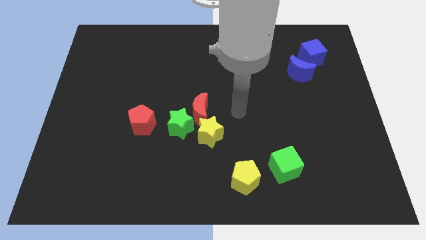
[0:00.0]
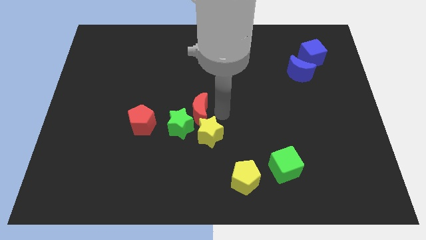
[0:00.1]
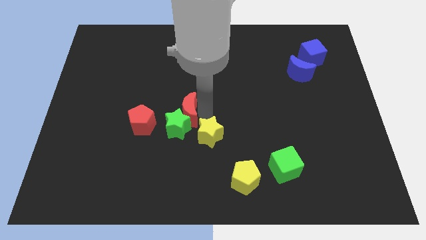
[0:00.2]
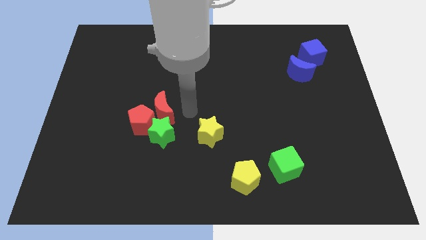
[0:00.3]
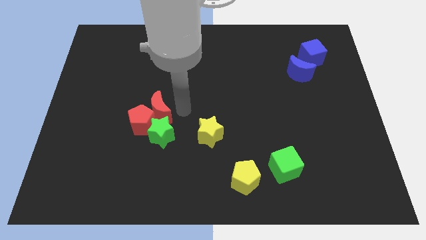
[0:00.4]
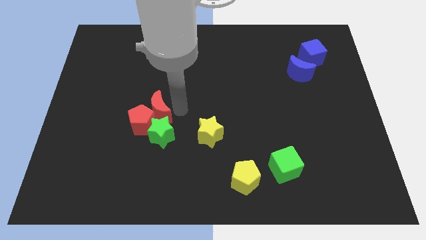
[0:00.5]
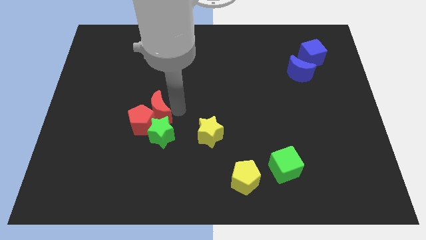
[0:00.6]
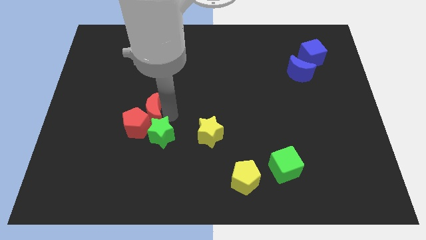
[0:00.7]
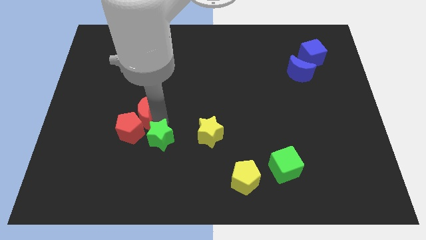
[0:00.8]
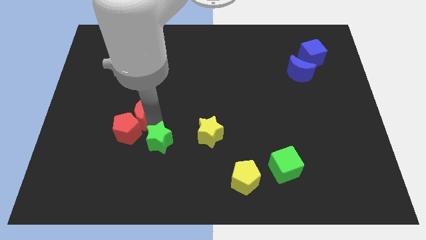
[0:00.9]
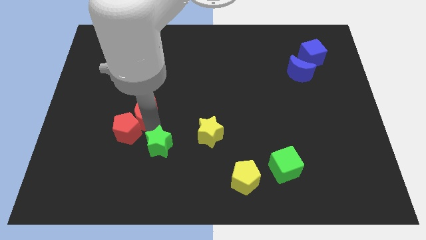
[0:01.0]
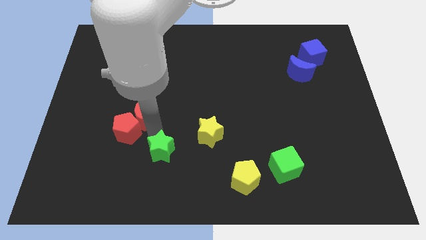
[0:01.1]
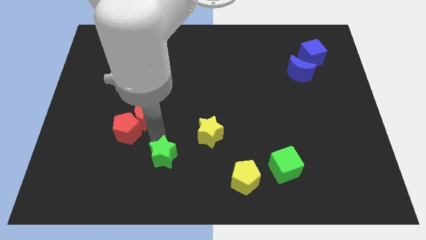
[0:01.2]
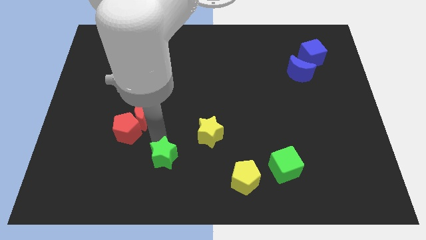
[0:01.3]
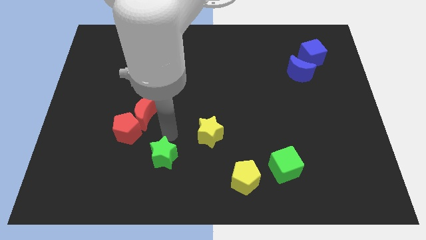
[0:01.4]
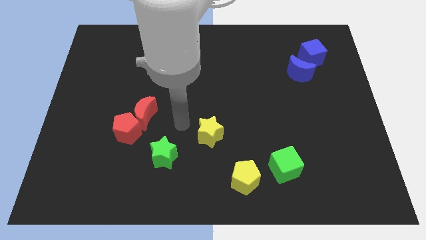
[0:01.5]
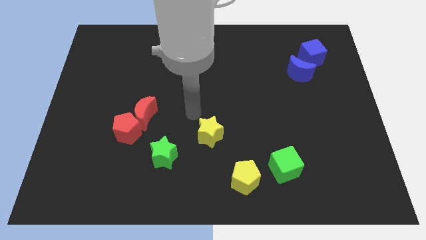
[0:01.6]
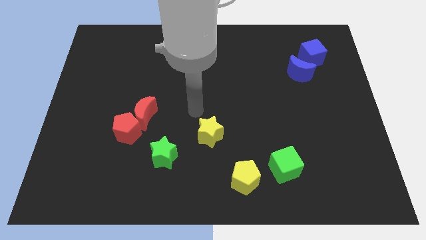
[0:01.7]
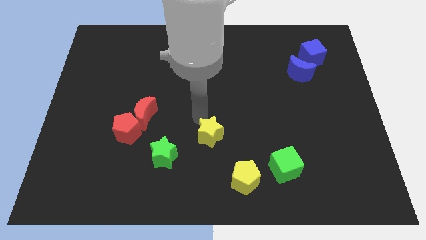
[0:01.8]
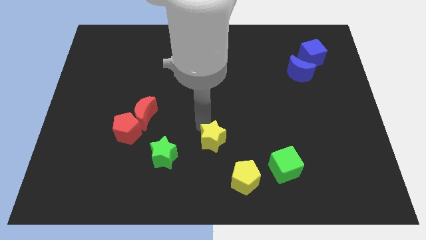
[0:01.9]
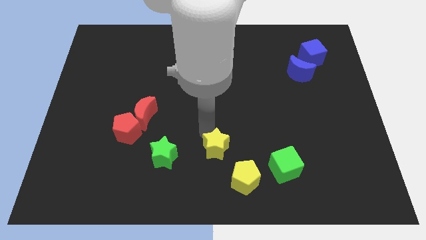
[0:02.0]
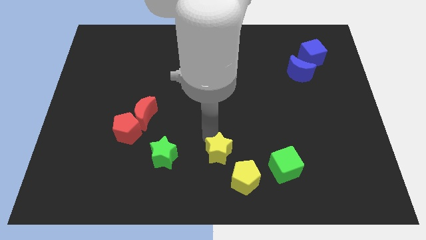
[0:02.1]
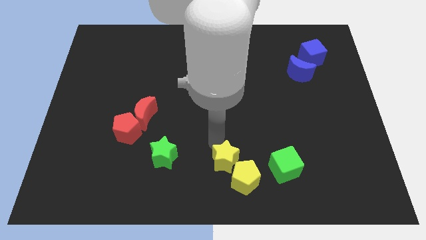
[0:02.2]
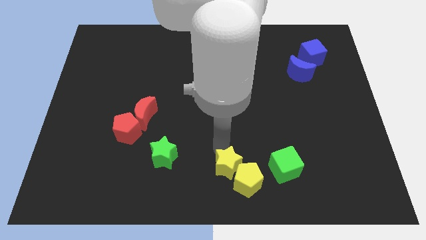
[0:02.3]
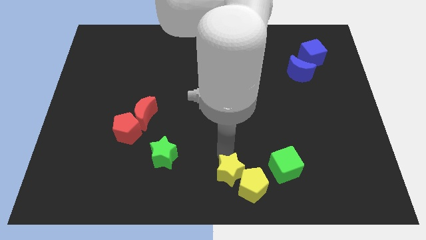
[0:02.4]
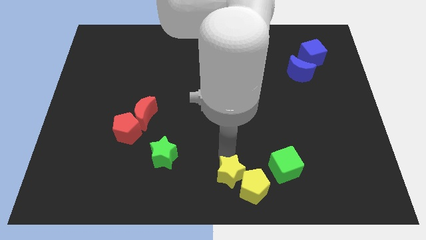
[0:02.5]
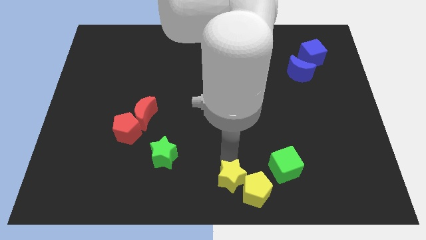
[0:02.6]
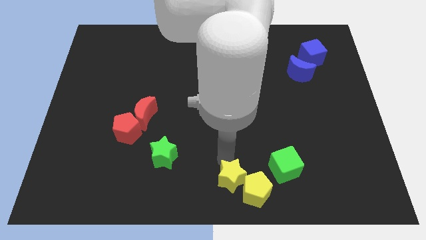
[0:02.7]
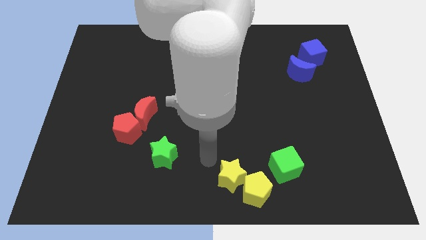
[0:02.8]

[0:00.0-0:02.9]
separate yellow blocks from green star

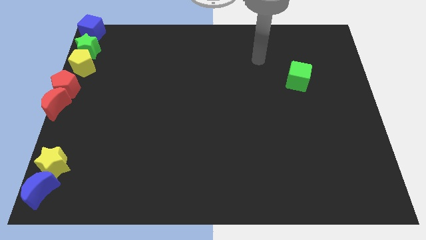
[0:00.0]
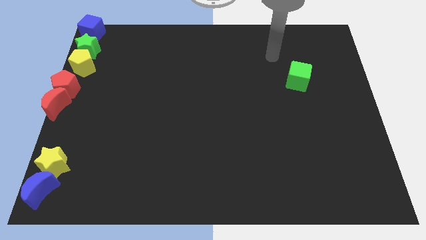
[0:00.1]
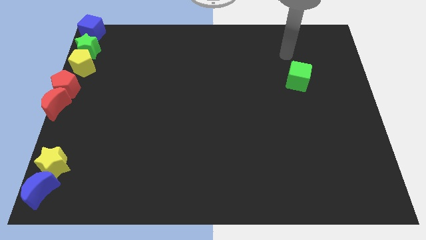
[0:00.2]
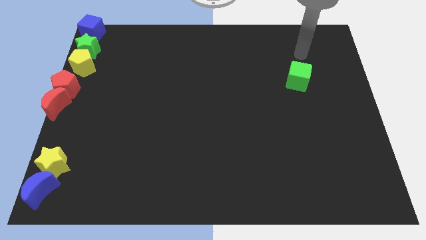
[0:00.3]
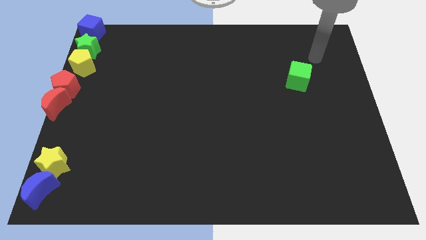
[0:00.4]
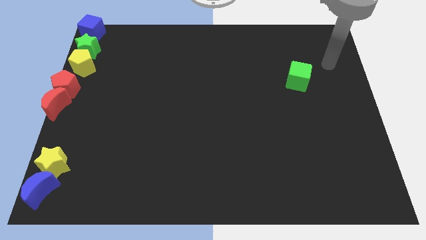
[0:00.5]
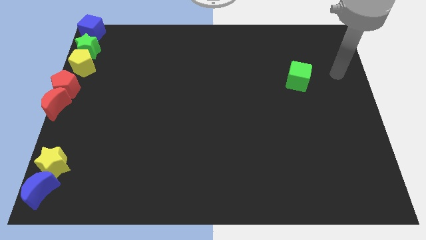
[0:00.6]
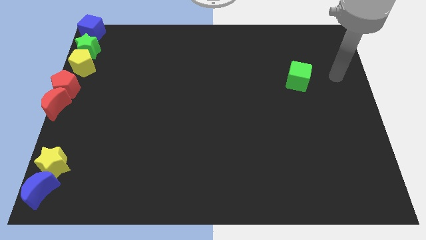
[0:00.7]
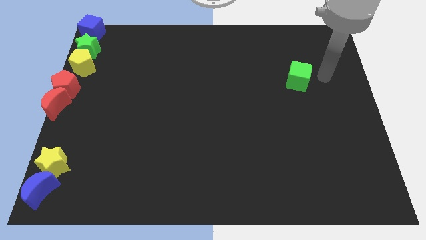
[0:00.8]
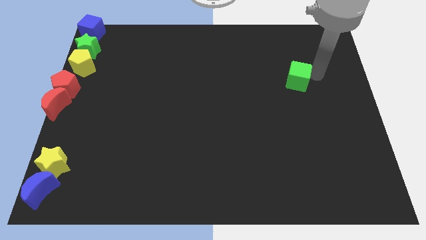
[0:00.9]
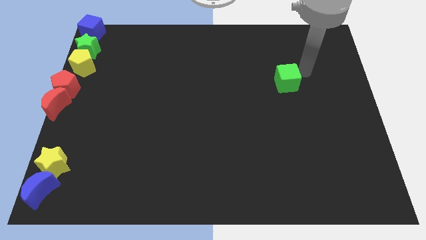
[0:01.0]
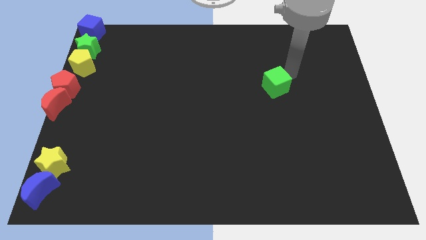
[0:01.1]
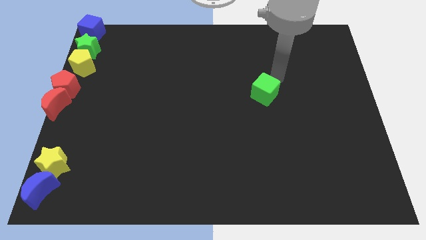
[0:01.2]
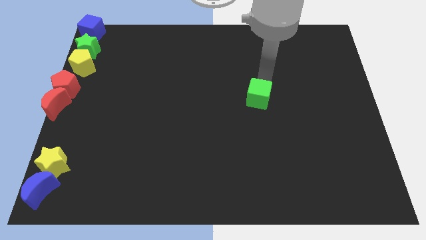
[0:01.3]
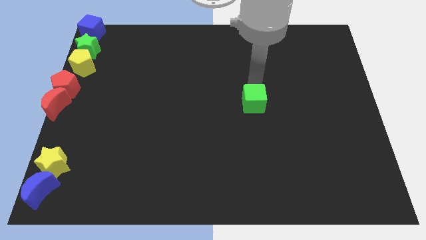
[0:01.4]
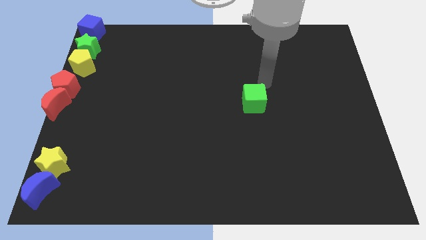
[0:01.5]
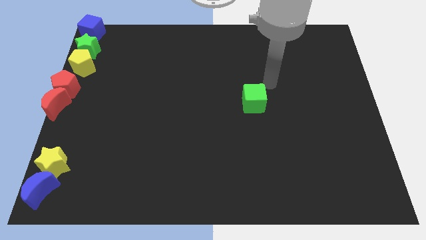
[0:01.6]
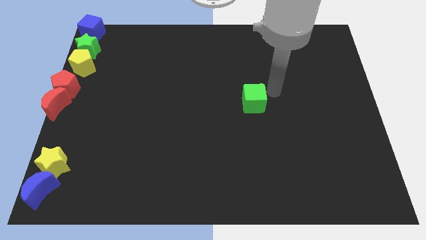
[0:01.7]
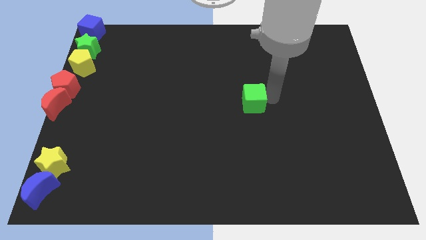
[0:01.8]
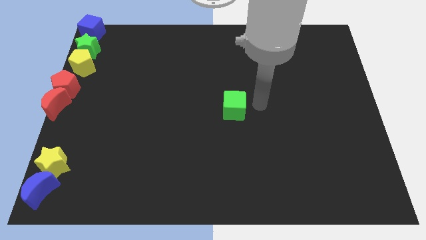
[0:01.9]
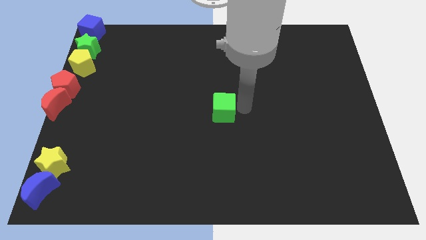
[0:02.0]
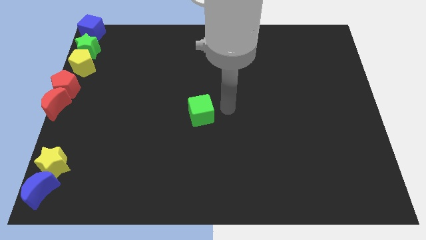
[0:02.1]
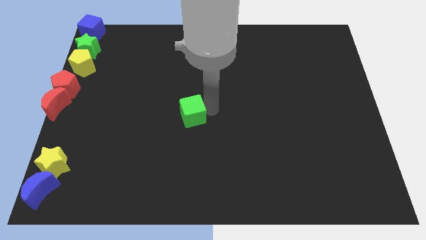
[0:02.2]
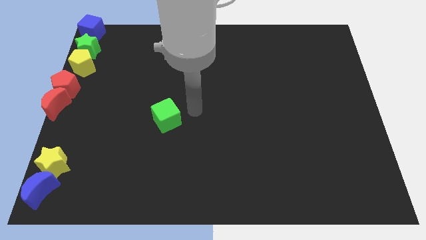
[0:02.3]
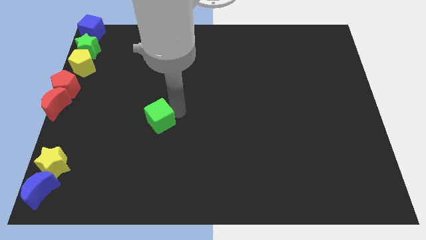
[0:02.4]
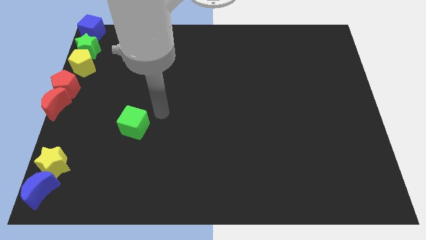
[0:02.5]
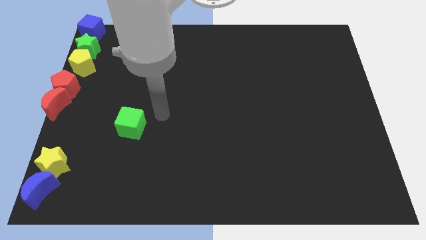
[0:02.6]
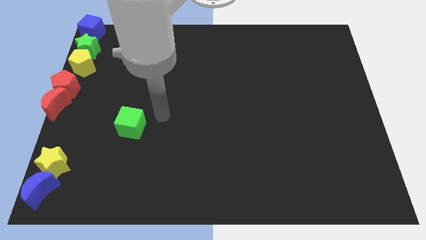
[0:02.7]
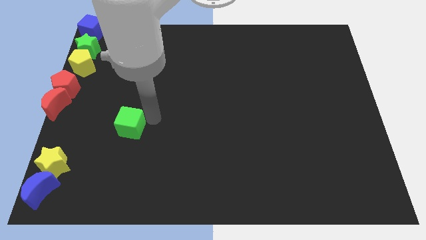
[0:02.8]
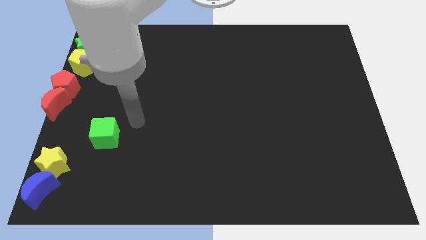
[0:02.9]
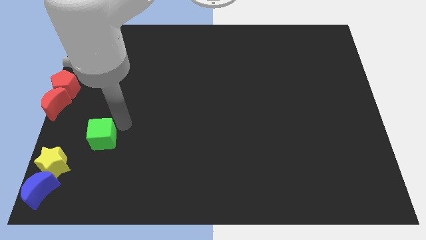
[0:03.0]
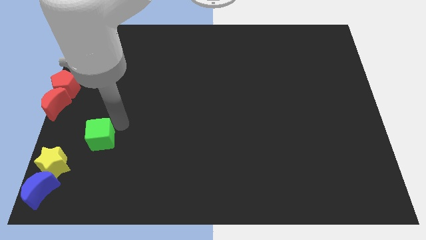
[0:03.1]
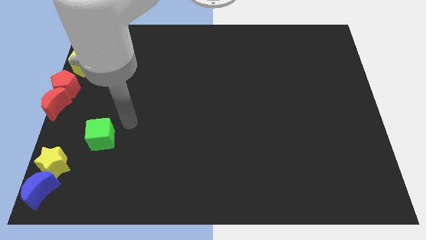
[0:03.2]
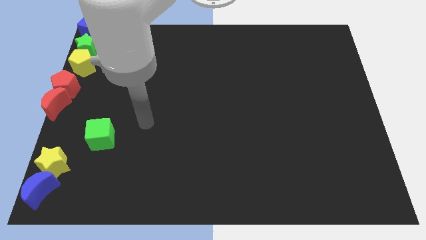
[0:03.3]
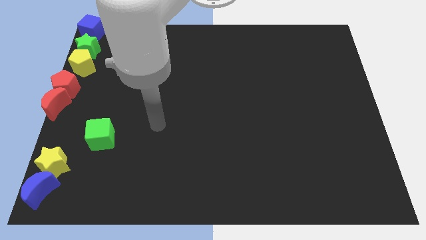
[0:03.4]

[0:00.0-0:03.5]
move green cube to the top right of yellow star

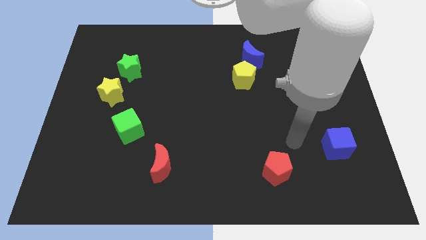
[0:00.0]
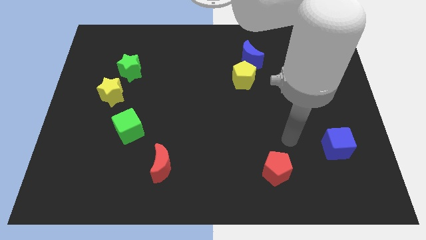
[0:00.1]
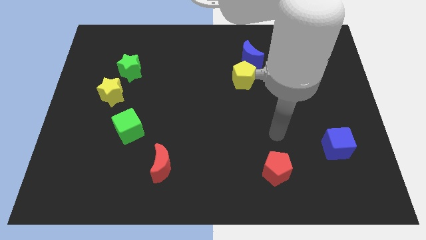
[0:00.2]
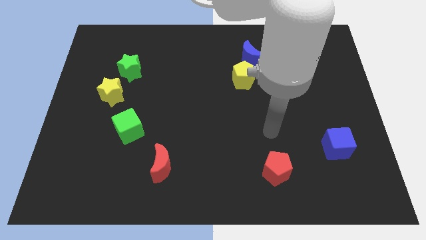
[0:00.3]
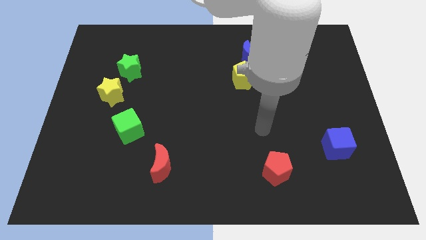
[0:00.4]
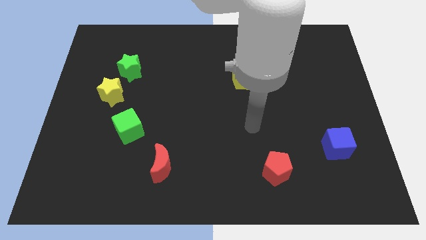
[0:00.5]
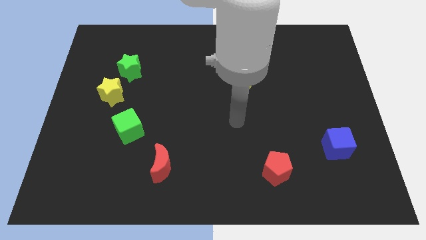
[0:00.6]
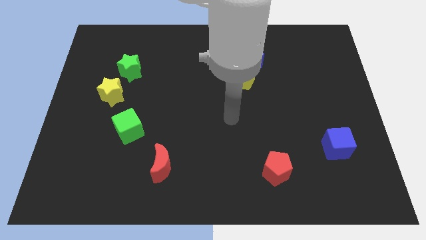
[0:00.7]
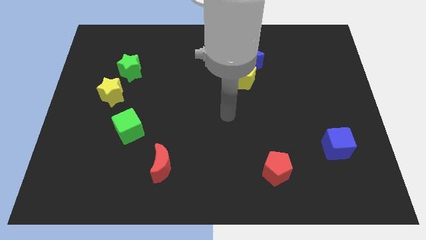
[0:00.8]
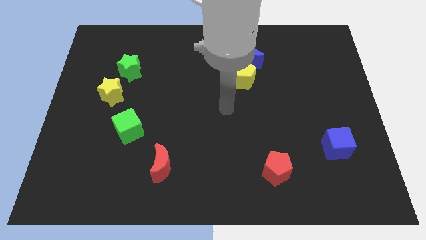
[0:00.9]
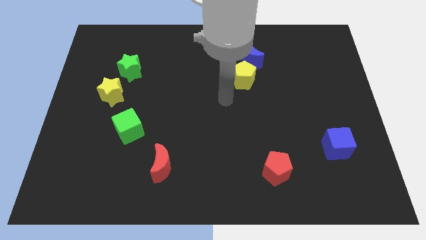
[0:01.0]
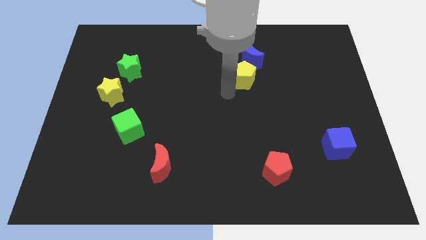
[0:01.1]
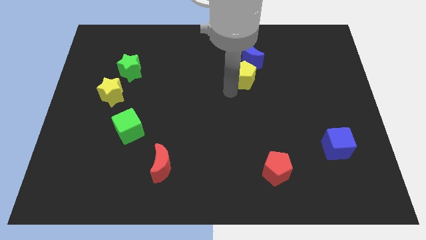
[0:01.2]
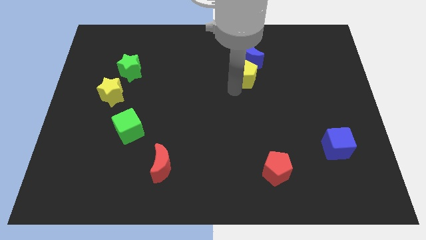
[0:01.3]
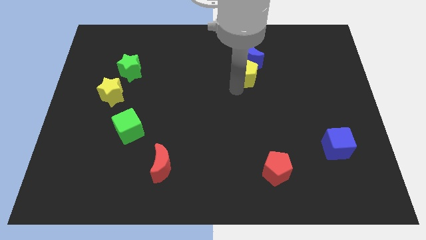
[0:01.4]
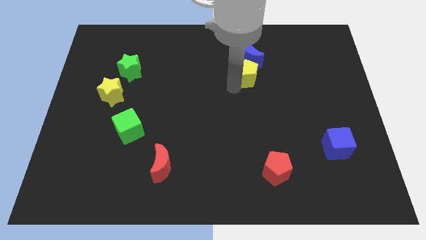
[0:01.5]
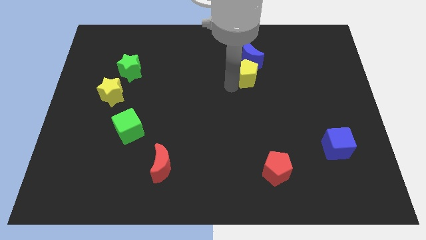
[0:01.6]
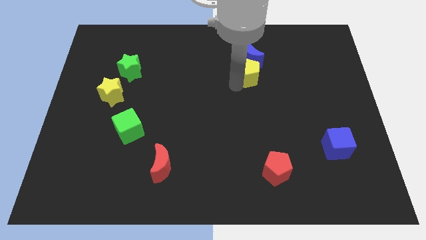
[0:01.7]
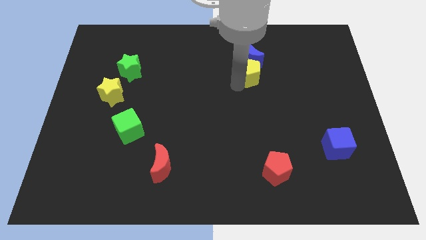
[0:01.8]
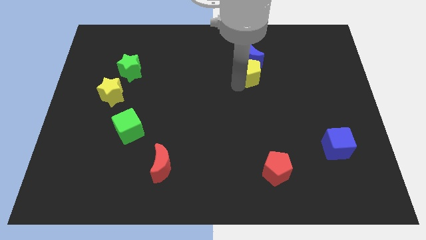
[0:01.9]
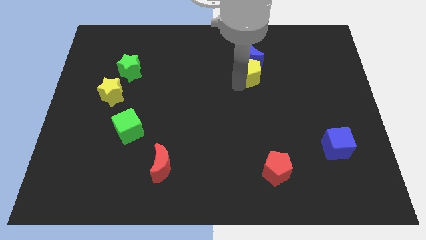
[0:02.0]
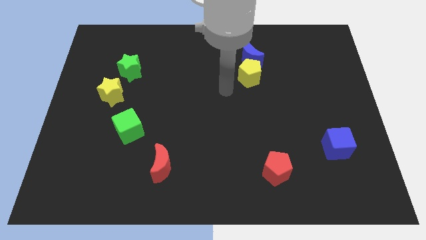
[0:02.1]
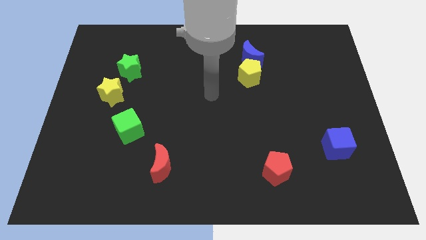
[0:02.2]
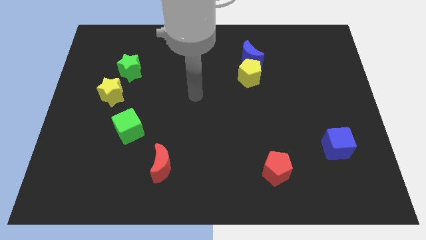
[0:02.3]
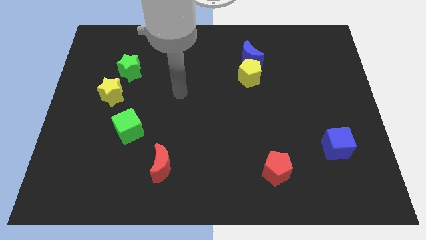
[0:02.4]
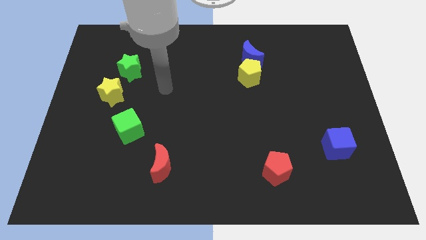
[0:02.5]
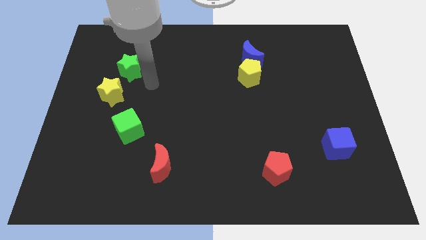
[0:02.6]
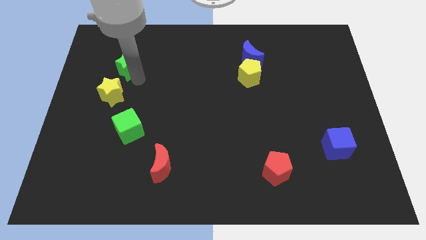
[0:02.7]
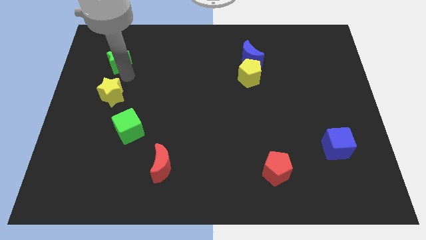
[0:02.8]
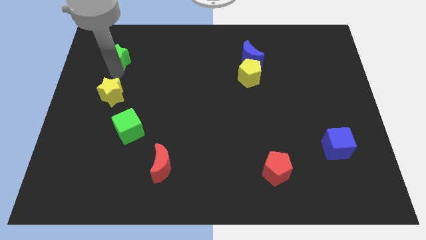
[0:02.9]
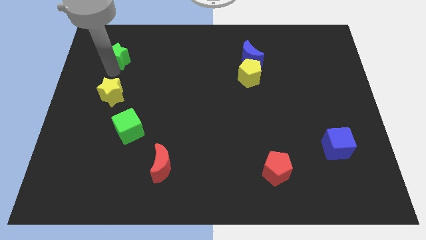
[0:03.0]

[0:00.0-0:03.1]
slide the green star horizontal to the blue moon
